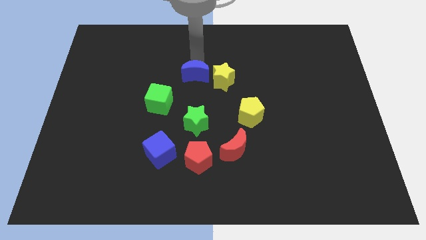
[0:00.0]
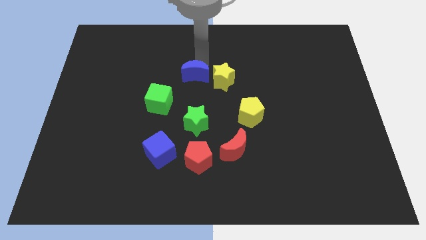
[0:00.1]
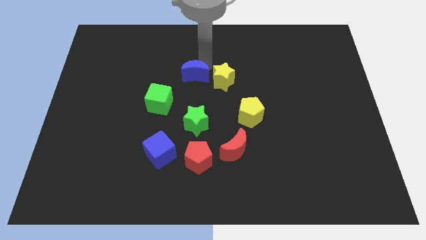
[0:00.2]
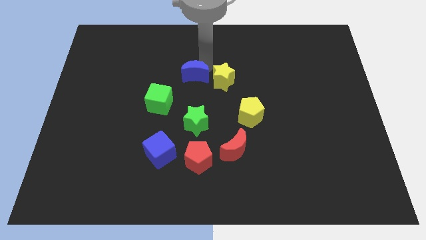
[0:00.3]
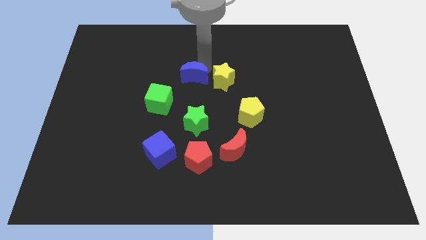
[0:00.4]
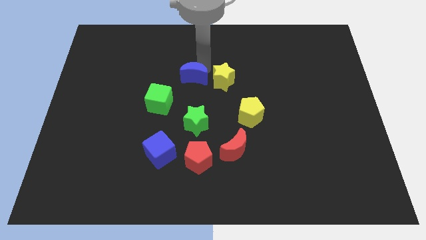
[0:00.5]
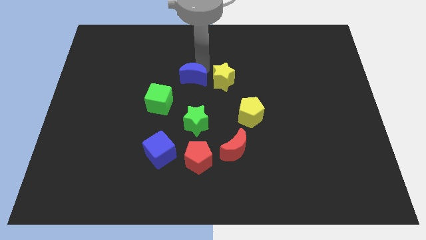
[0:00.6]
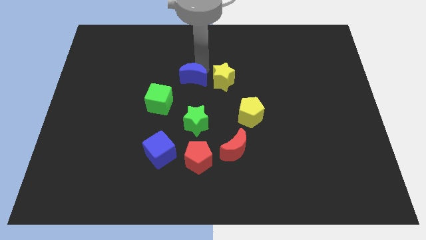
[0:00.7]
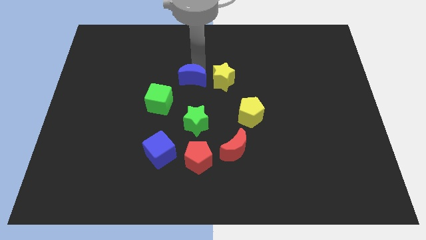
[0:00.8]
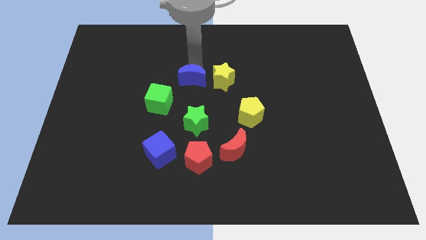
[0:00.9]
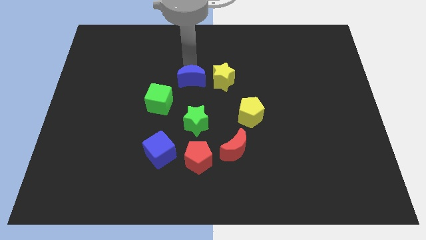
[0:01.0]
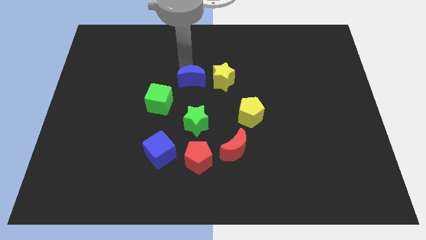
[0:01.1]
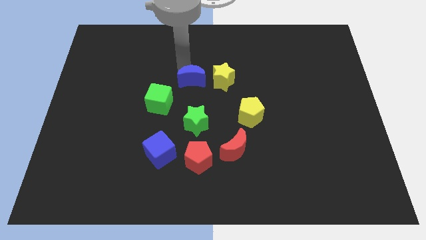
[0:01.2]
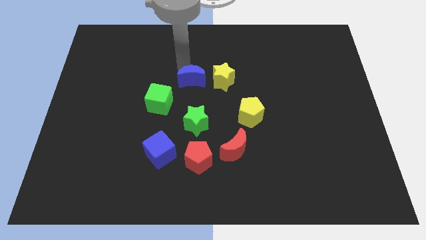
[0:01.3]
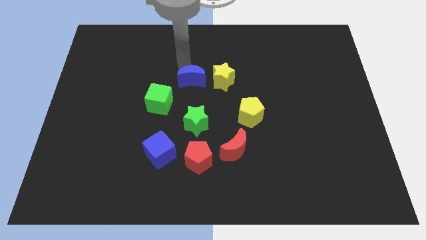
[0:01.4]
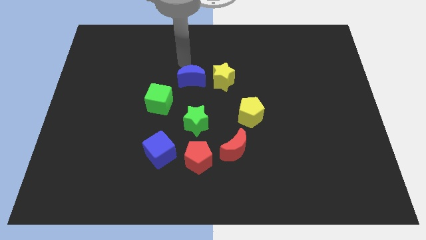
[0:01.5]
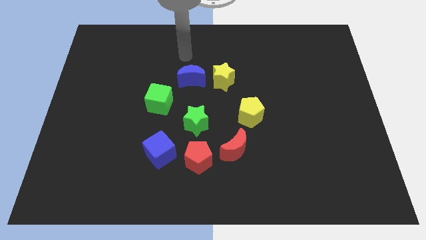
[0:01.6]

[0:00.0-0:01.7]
move the blue moon slightly to the bottom

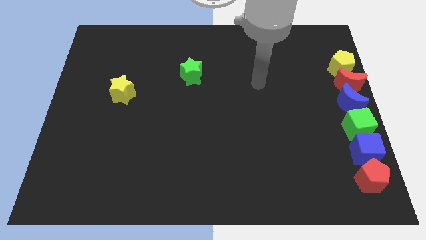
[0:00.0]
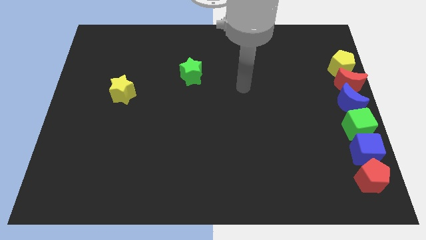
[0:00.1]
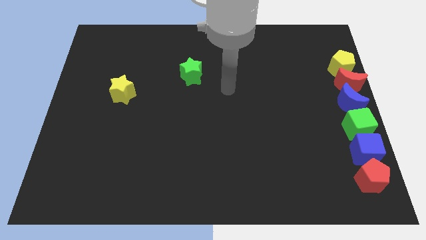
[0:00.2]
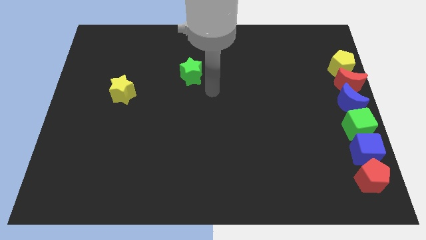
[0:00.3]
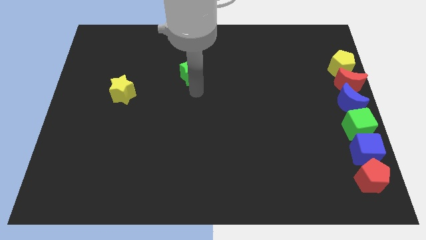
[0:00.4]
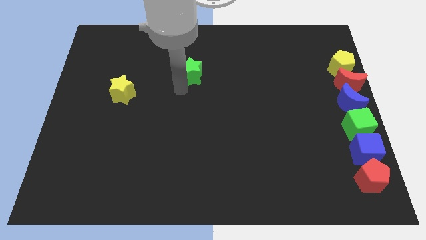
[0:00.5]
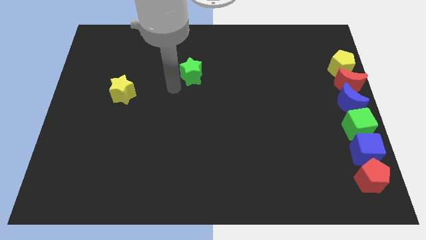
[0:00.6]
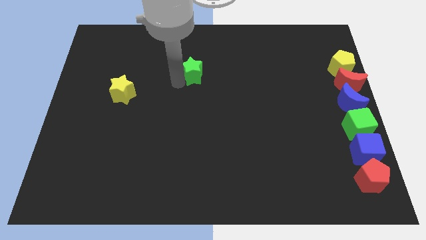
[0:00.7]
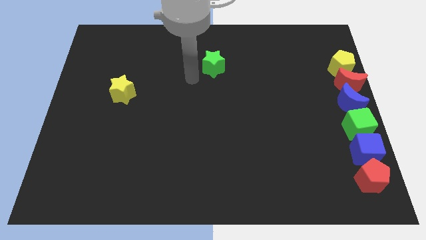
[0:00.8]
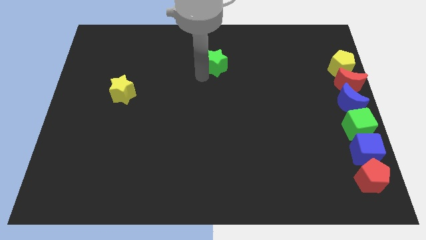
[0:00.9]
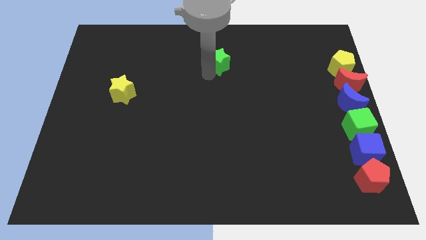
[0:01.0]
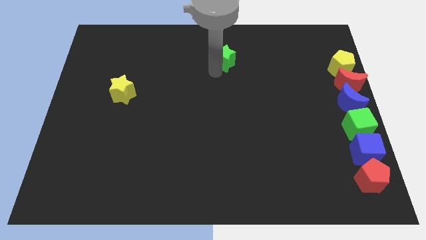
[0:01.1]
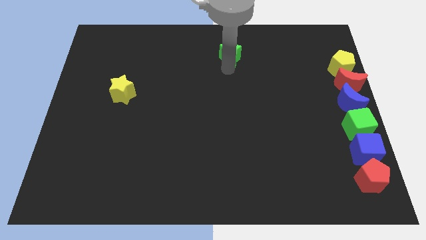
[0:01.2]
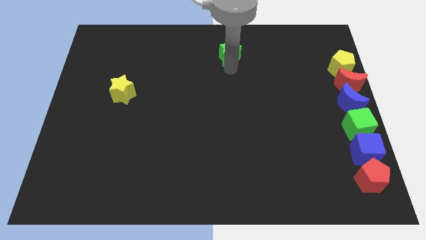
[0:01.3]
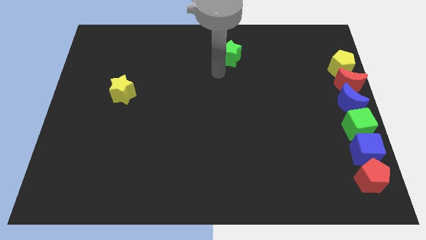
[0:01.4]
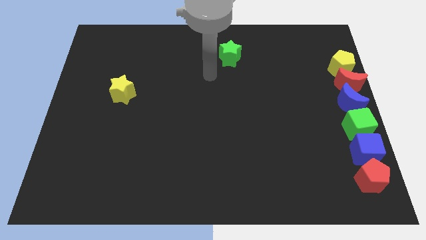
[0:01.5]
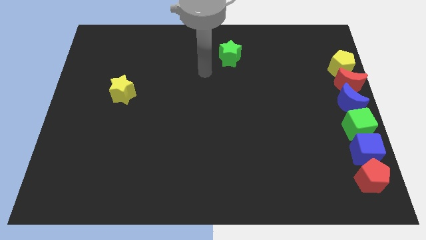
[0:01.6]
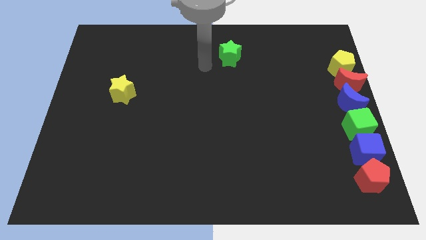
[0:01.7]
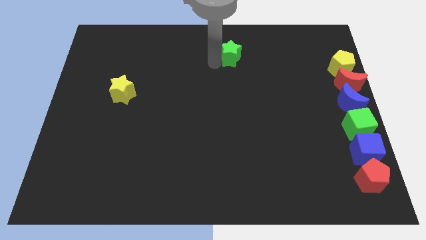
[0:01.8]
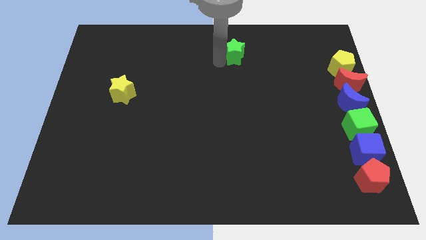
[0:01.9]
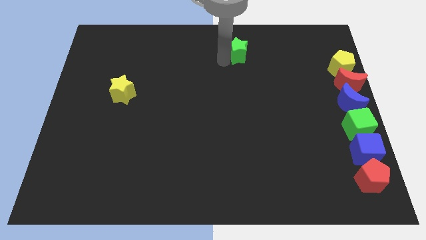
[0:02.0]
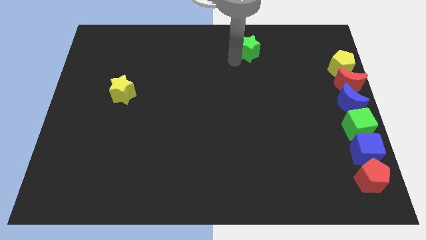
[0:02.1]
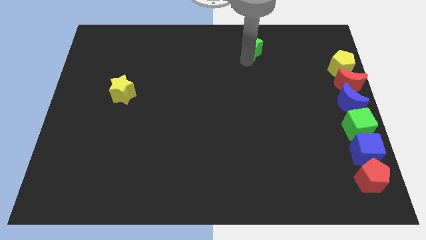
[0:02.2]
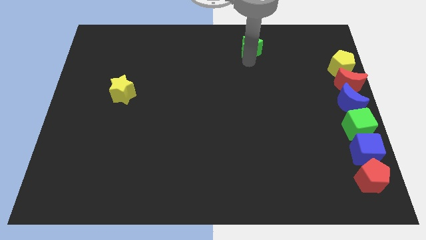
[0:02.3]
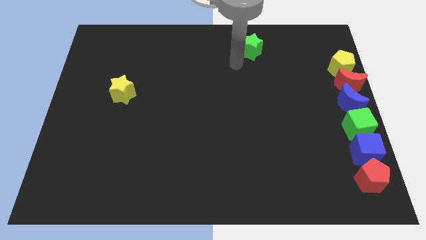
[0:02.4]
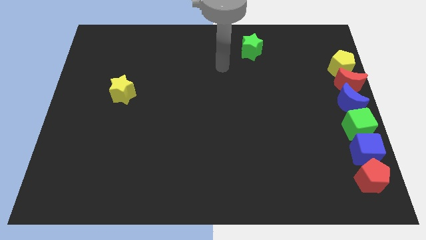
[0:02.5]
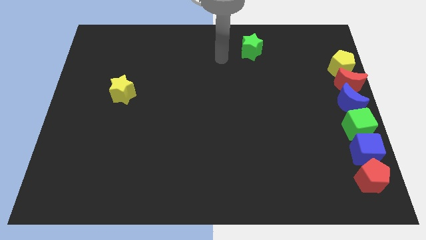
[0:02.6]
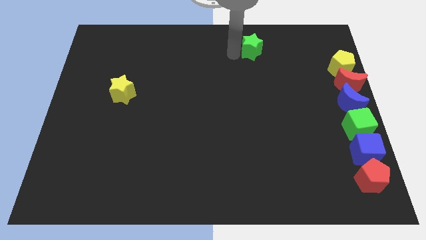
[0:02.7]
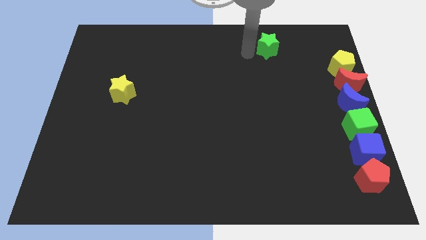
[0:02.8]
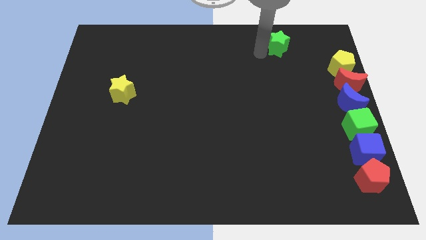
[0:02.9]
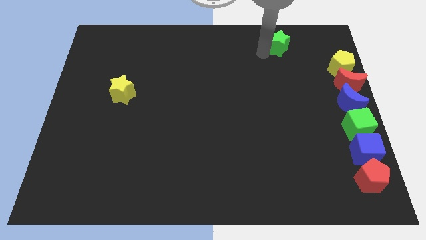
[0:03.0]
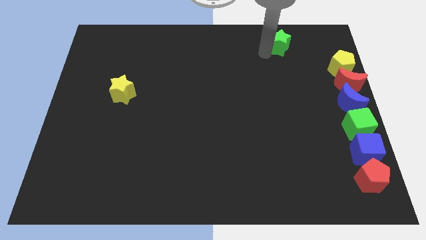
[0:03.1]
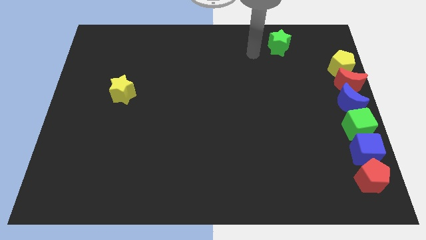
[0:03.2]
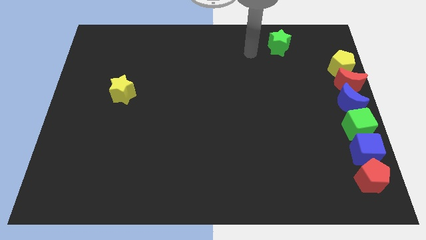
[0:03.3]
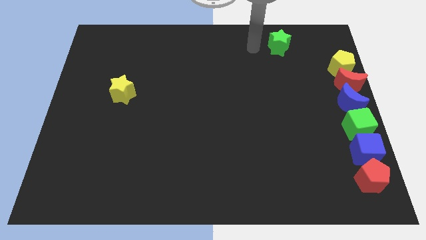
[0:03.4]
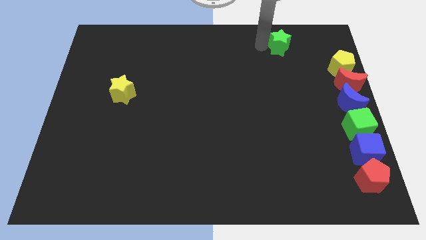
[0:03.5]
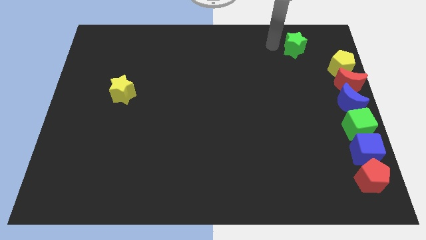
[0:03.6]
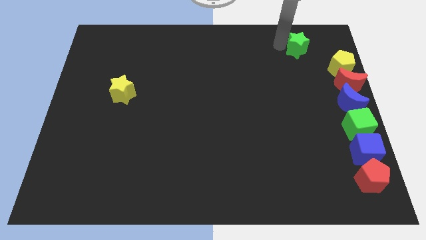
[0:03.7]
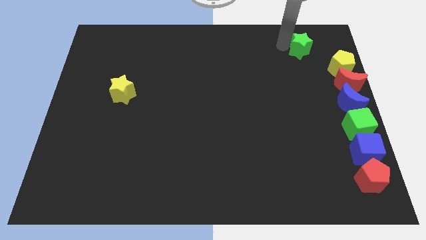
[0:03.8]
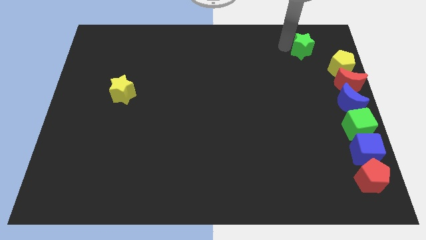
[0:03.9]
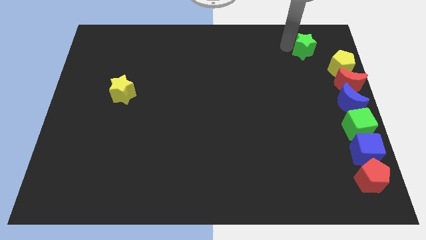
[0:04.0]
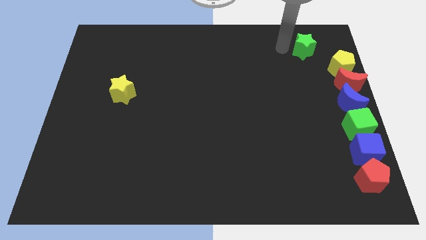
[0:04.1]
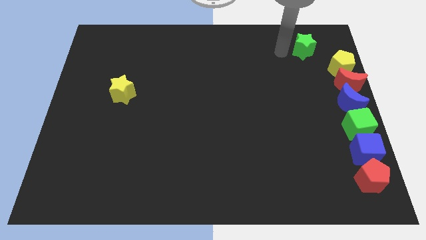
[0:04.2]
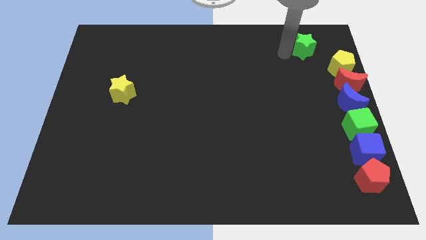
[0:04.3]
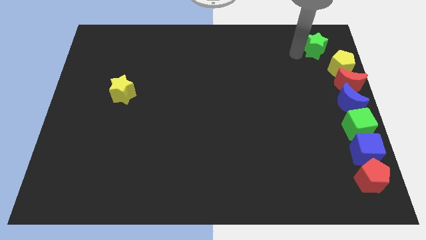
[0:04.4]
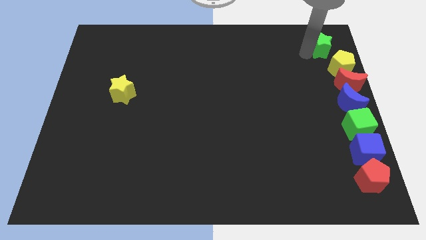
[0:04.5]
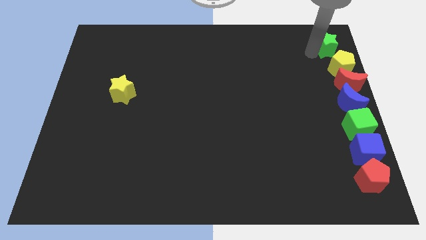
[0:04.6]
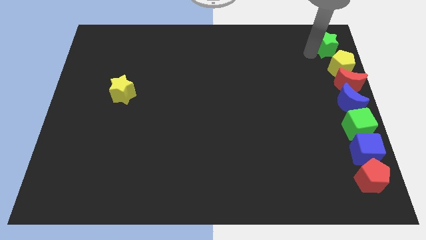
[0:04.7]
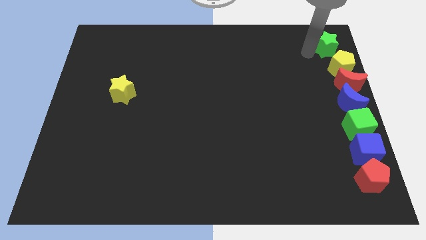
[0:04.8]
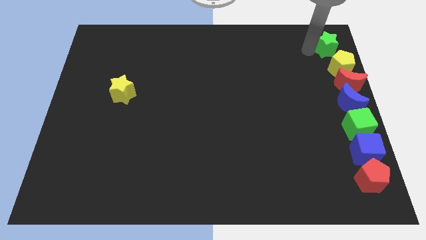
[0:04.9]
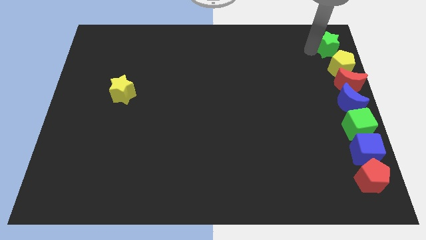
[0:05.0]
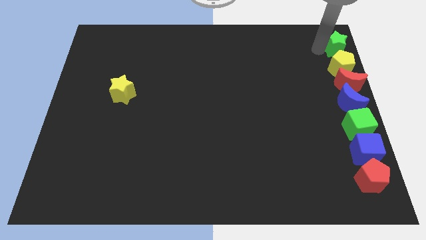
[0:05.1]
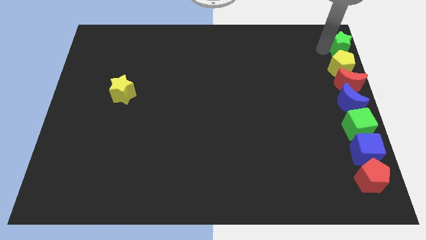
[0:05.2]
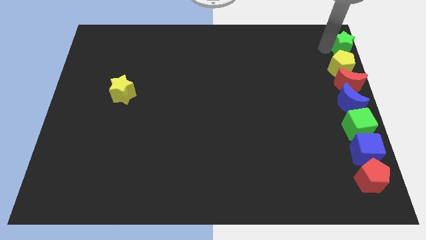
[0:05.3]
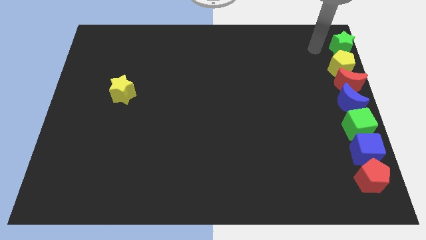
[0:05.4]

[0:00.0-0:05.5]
move the green star above the yellow pentagon

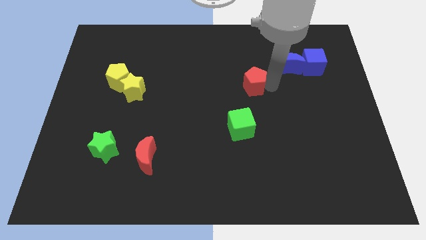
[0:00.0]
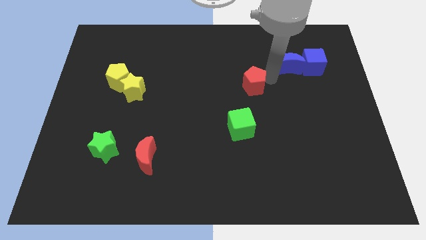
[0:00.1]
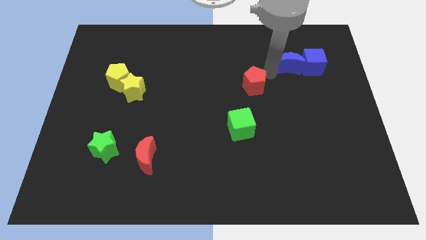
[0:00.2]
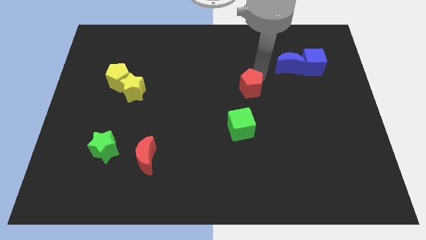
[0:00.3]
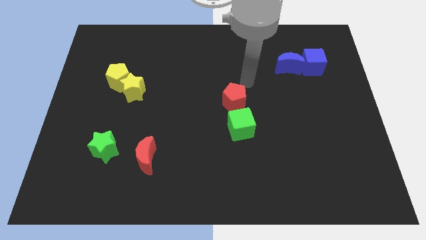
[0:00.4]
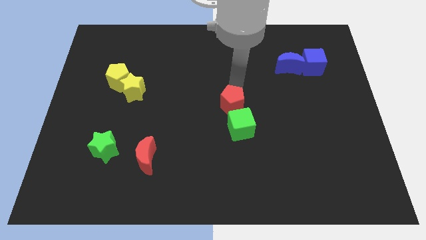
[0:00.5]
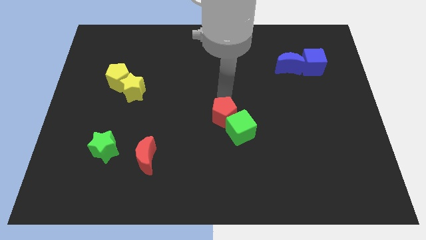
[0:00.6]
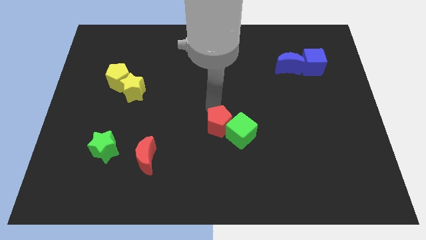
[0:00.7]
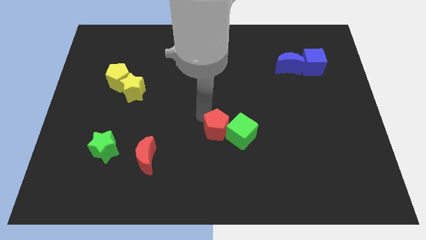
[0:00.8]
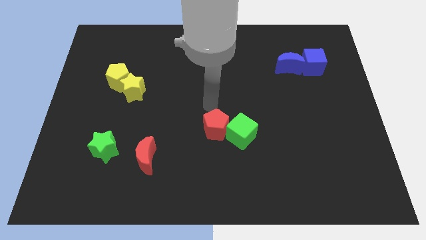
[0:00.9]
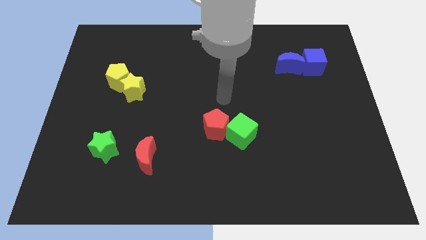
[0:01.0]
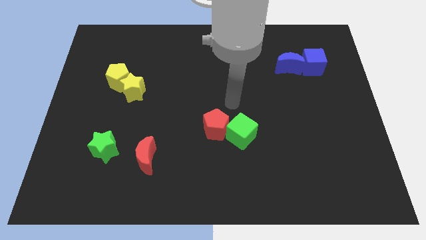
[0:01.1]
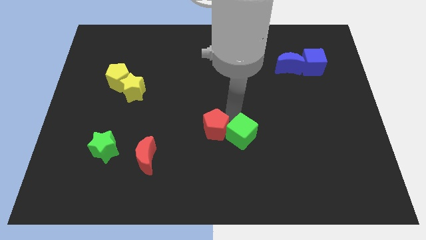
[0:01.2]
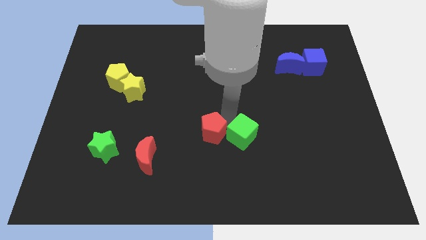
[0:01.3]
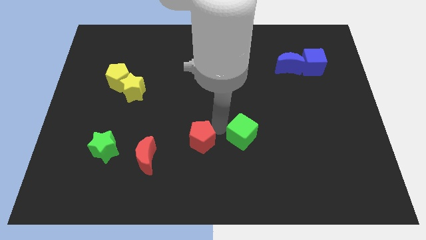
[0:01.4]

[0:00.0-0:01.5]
move the red pentagon to the left of the green cube
